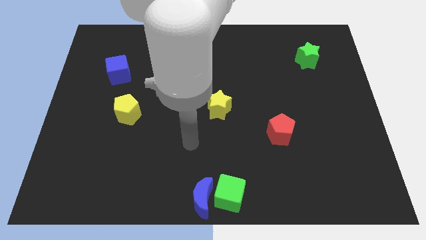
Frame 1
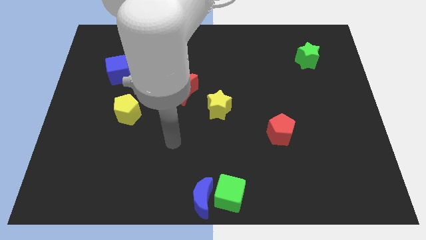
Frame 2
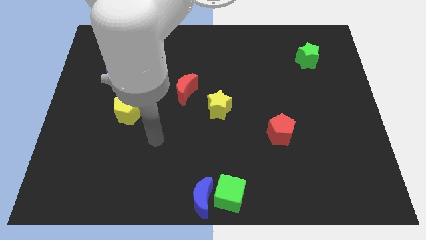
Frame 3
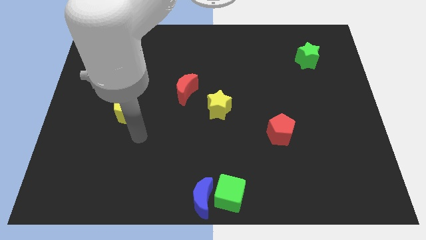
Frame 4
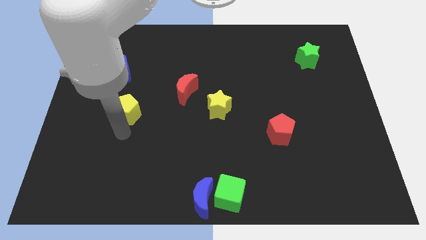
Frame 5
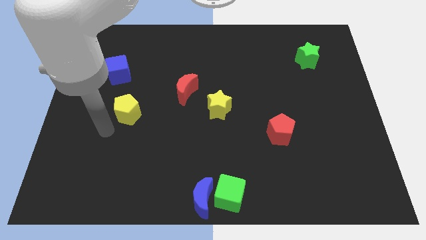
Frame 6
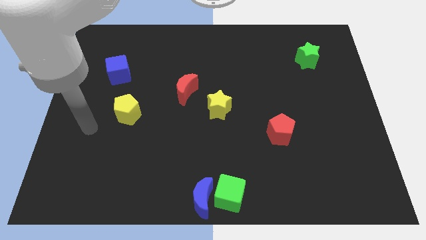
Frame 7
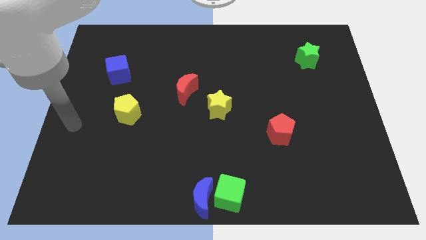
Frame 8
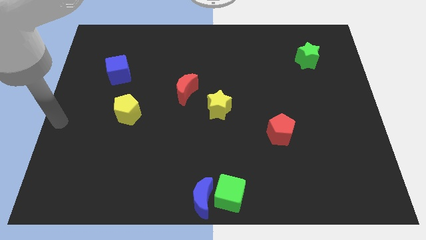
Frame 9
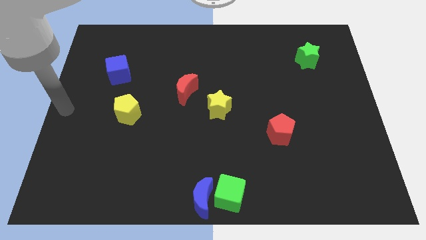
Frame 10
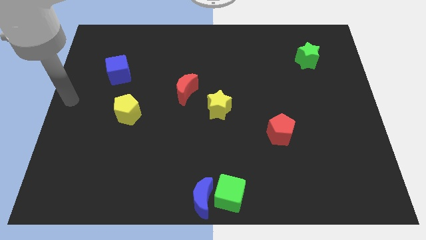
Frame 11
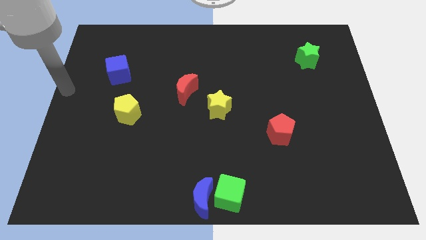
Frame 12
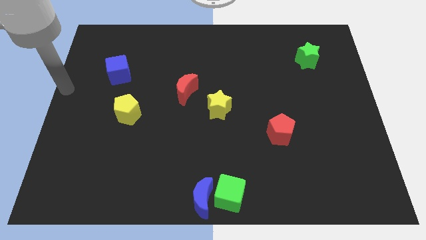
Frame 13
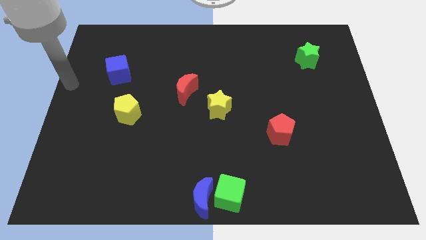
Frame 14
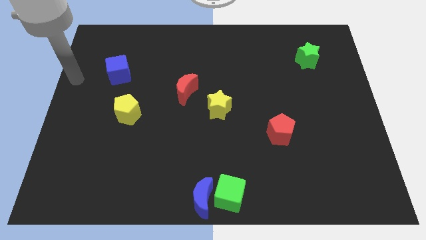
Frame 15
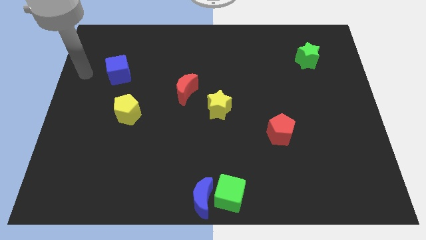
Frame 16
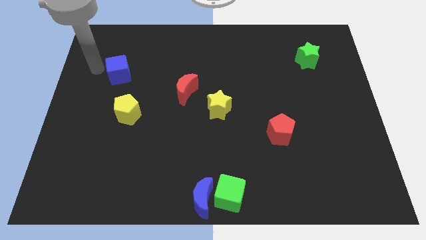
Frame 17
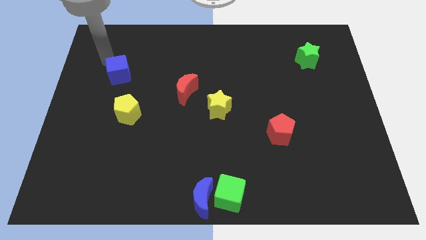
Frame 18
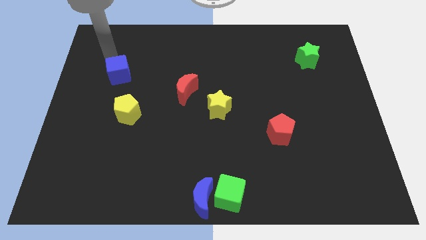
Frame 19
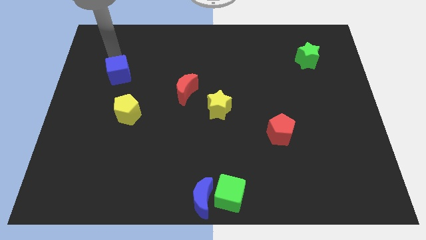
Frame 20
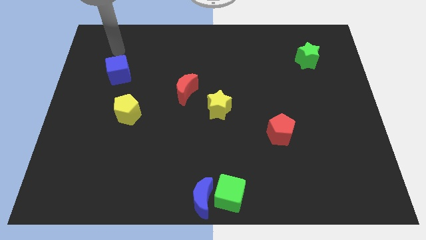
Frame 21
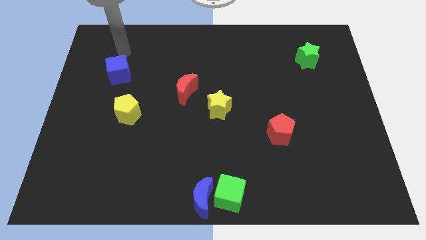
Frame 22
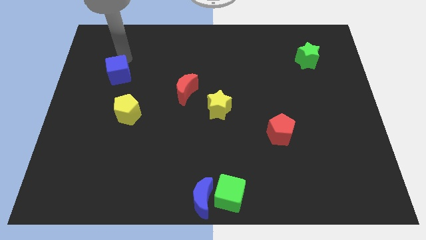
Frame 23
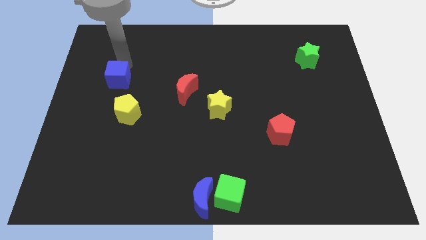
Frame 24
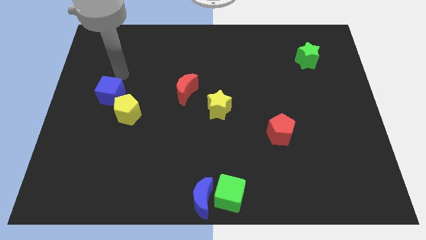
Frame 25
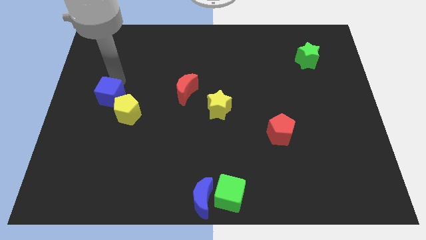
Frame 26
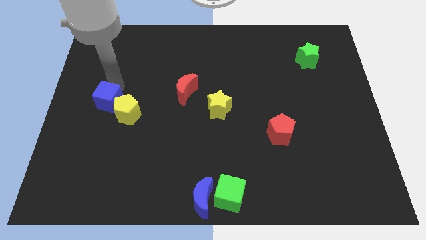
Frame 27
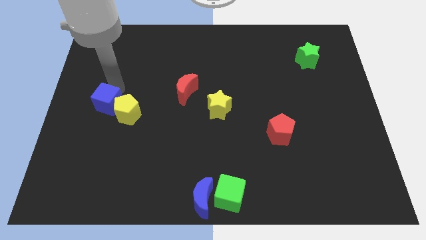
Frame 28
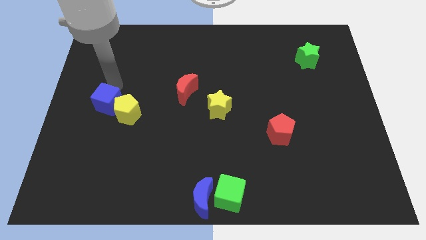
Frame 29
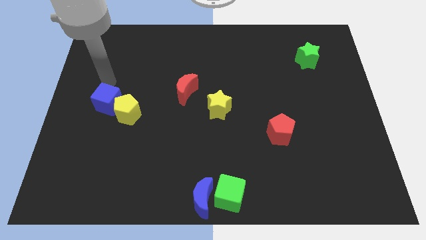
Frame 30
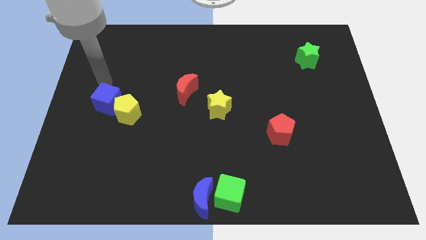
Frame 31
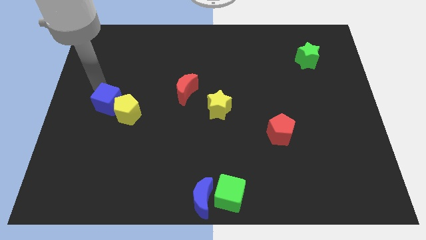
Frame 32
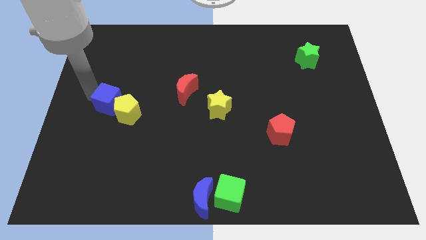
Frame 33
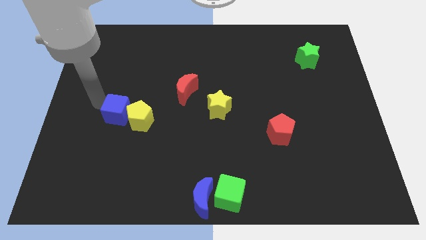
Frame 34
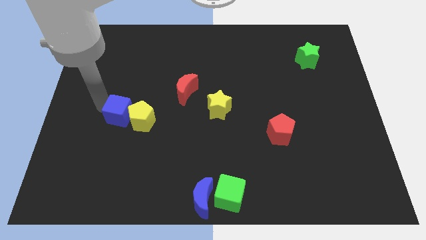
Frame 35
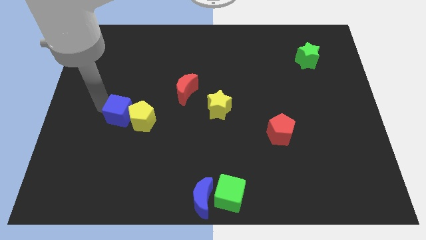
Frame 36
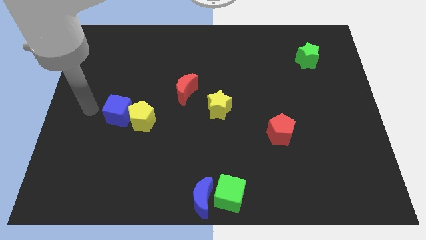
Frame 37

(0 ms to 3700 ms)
push the blue cube into the yellow pentagon

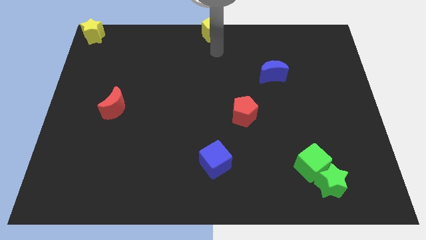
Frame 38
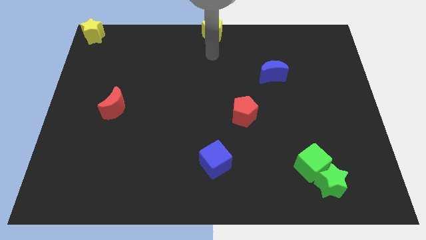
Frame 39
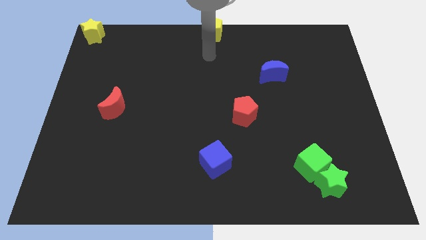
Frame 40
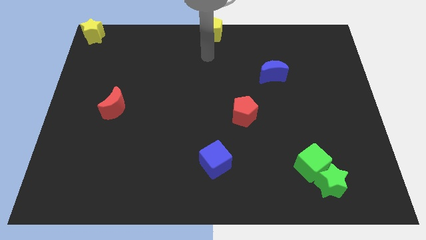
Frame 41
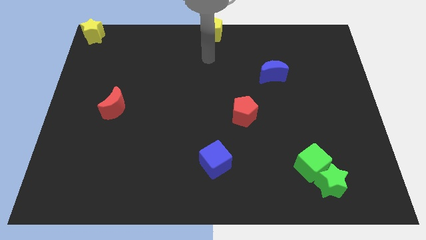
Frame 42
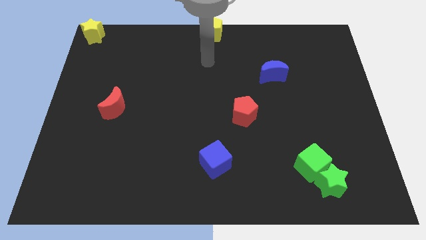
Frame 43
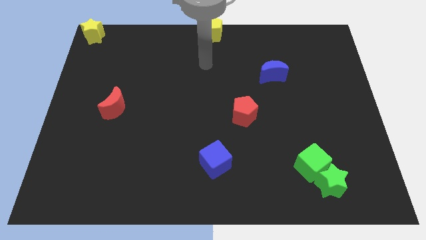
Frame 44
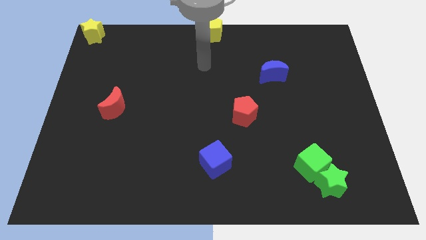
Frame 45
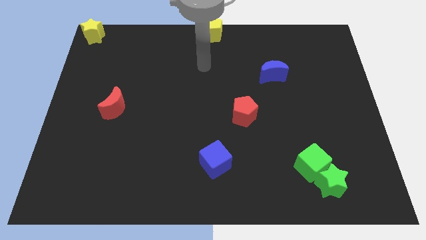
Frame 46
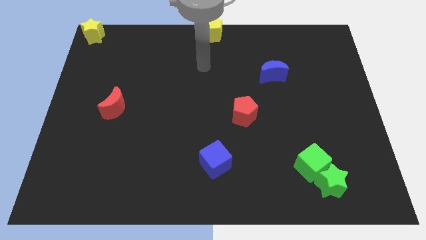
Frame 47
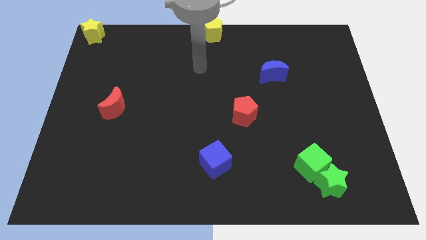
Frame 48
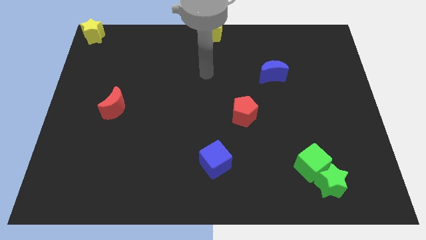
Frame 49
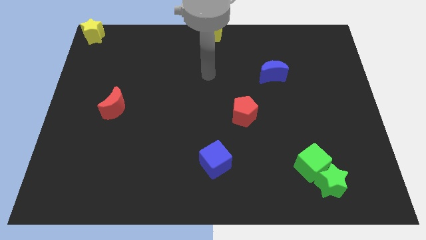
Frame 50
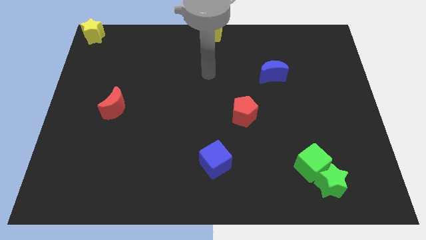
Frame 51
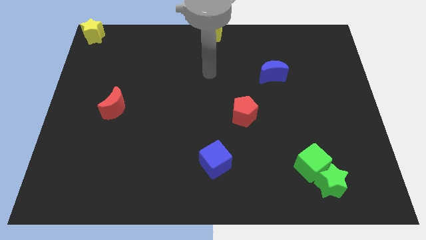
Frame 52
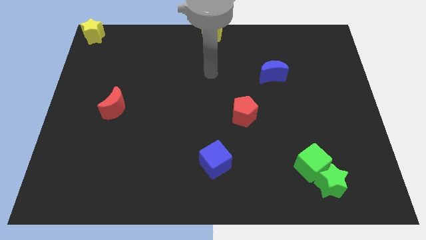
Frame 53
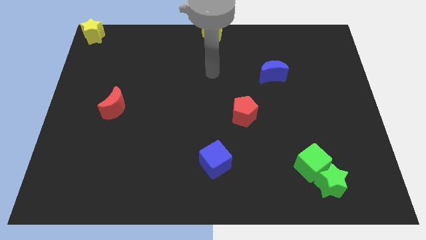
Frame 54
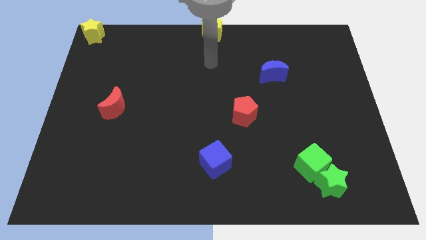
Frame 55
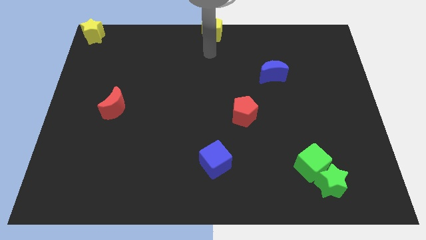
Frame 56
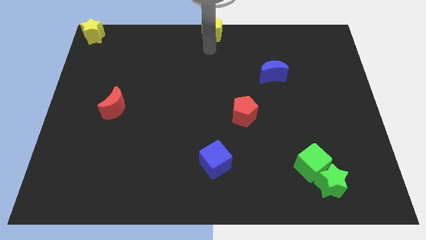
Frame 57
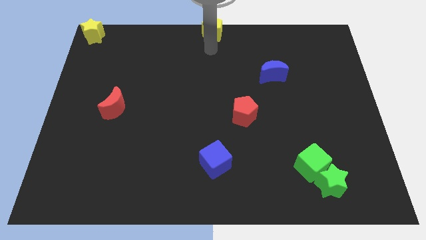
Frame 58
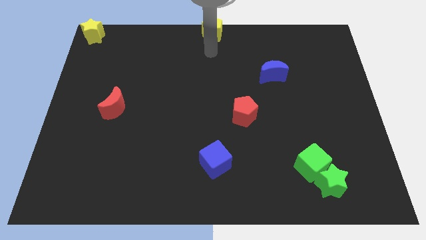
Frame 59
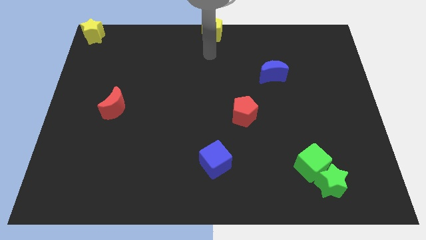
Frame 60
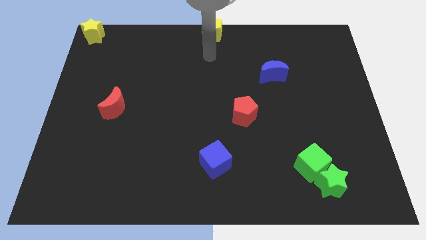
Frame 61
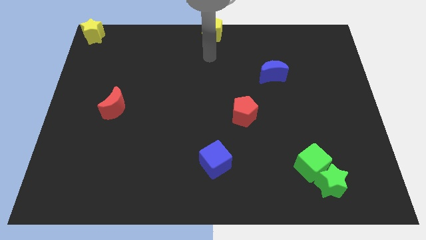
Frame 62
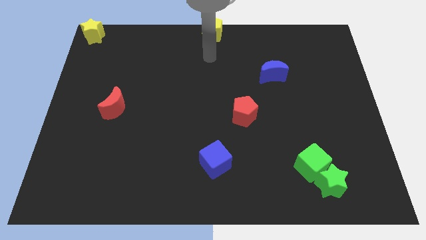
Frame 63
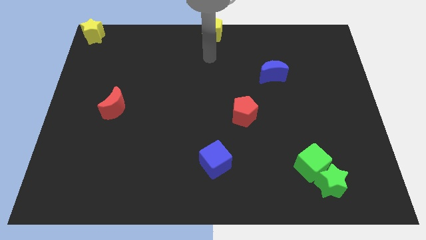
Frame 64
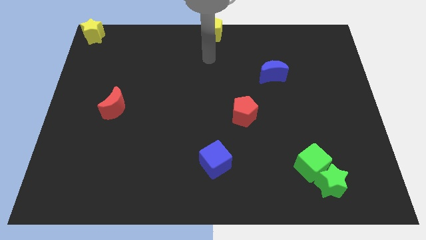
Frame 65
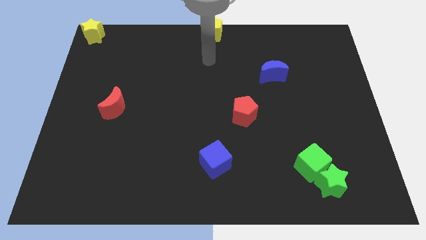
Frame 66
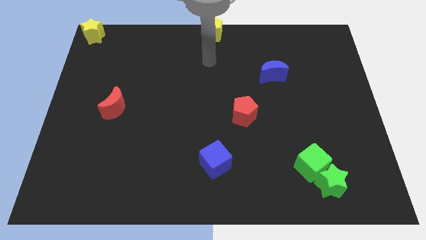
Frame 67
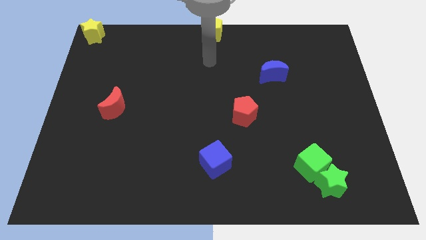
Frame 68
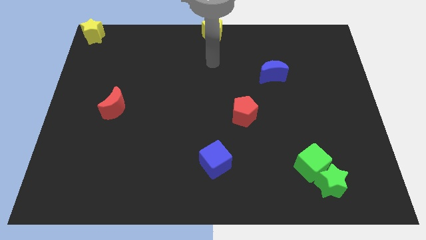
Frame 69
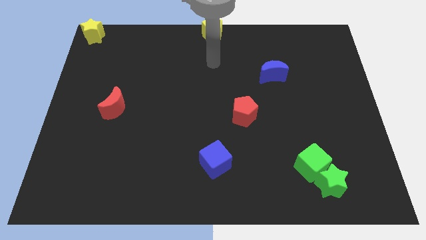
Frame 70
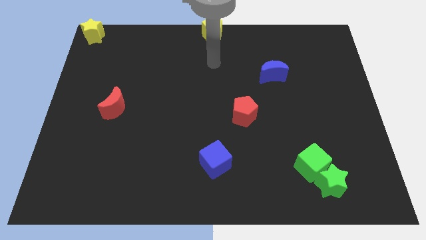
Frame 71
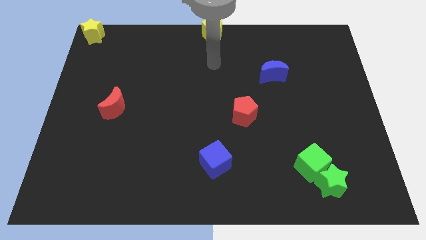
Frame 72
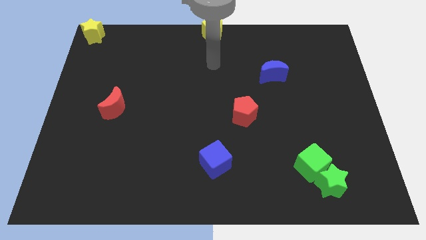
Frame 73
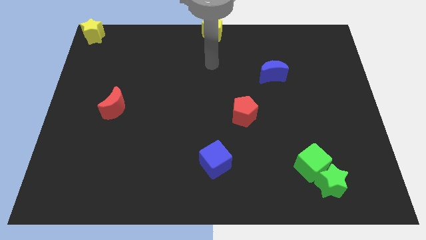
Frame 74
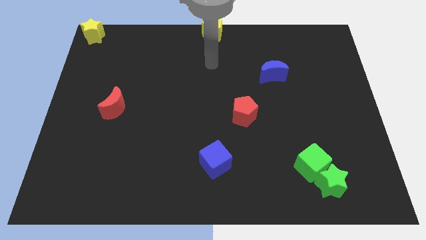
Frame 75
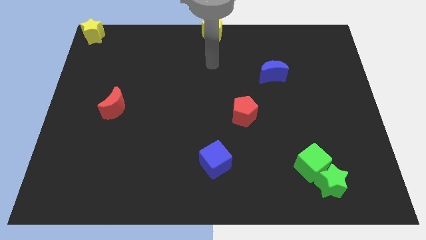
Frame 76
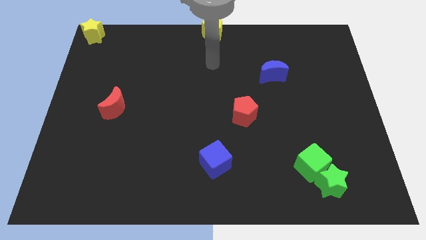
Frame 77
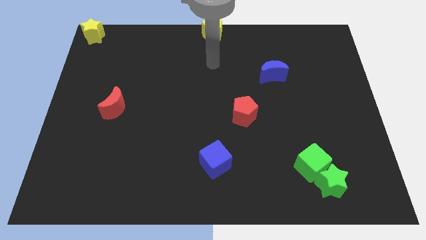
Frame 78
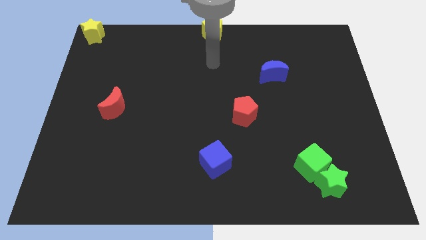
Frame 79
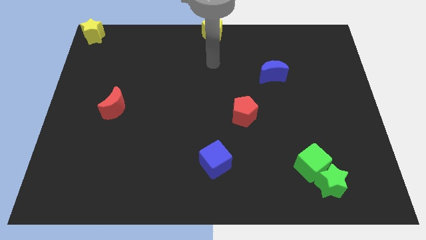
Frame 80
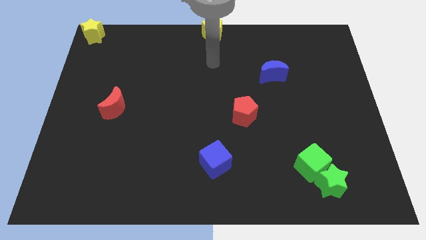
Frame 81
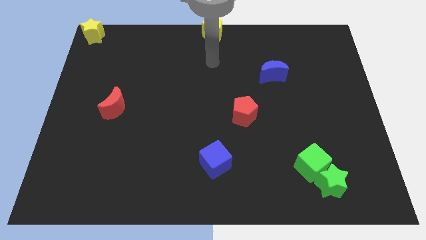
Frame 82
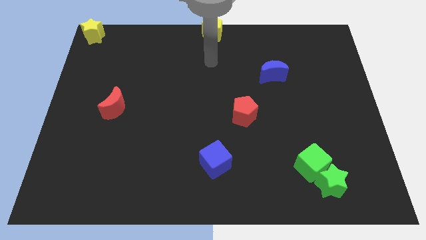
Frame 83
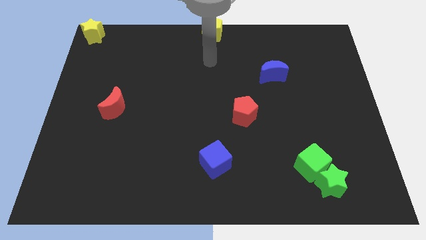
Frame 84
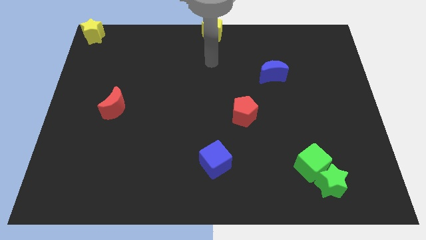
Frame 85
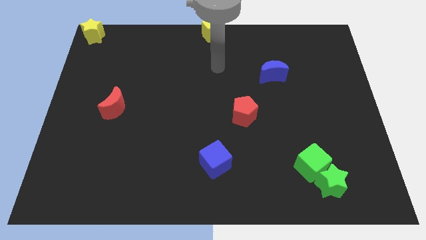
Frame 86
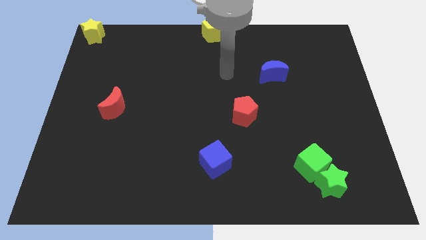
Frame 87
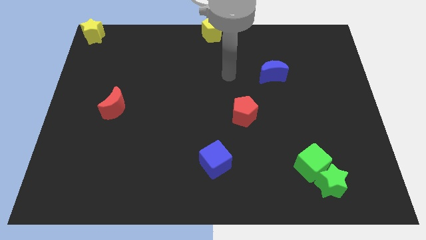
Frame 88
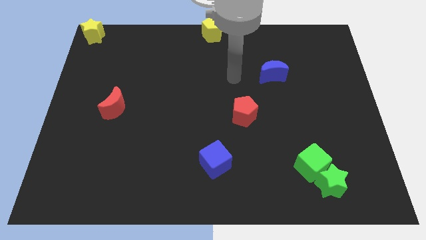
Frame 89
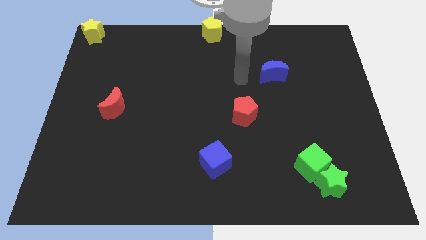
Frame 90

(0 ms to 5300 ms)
move the arm away from the yellow pentagon
